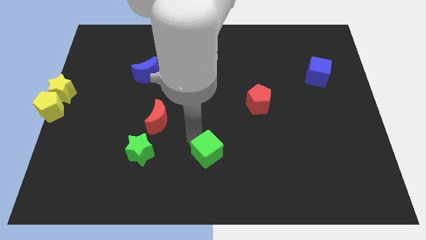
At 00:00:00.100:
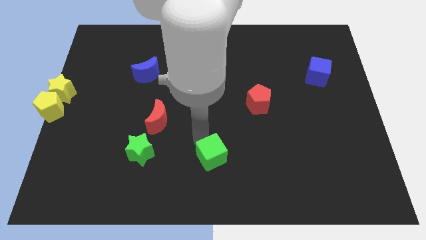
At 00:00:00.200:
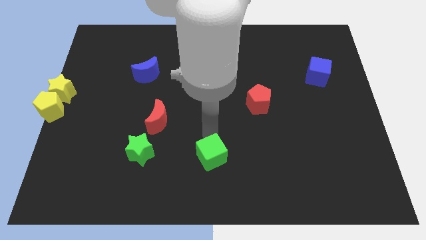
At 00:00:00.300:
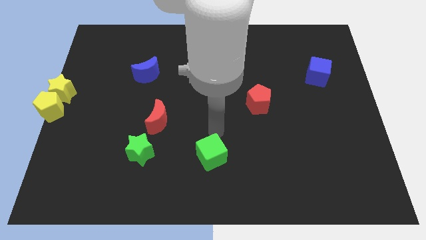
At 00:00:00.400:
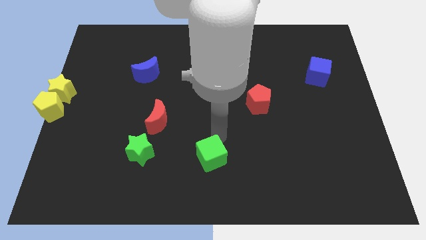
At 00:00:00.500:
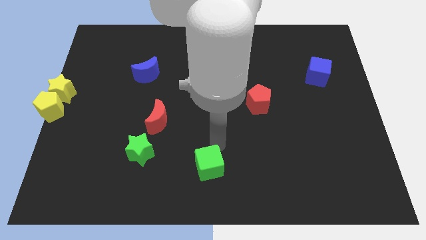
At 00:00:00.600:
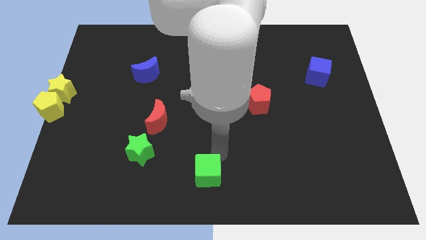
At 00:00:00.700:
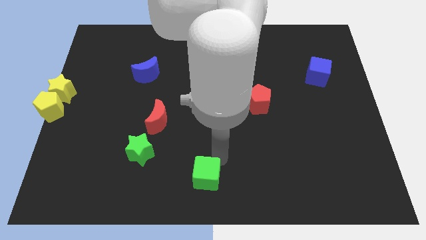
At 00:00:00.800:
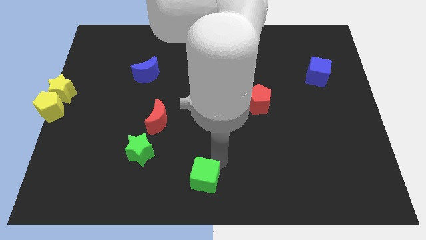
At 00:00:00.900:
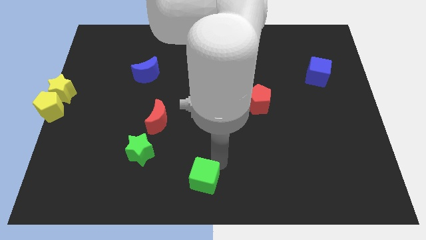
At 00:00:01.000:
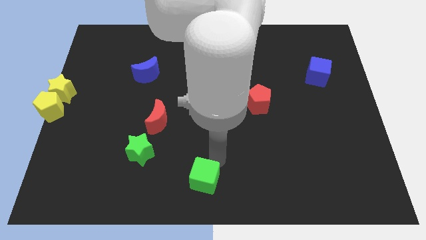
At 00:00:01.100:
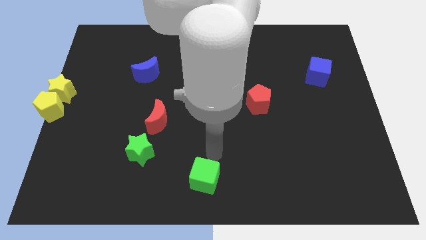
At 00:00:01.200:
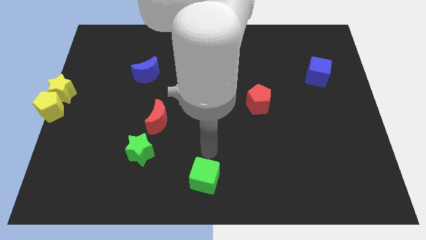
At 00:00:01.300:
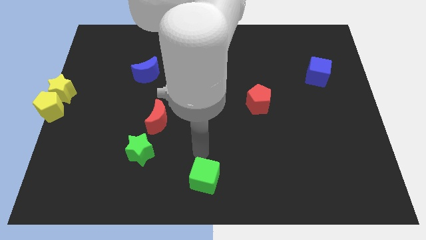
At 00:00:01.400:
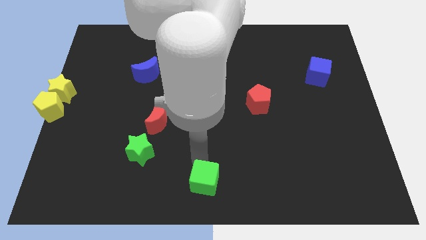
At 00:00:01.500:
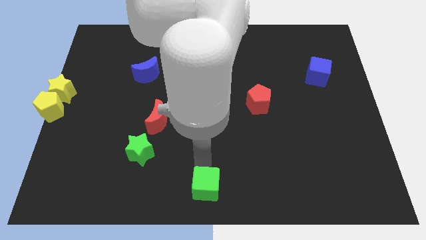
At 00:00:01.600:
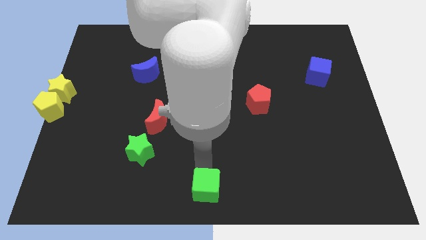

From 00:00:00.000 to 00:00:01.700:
put the green cube at the bottom center

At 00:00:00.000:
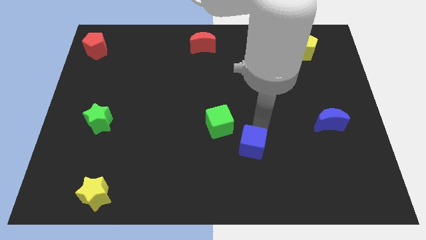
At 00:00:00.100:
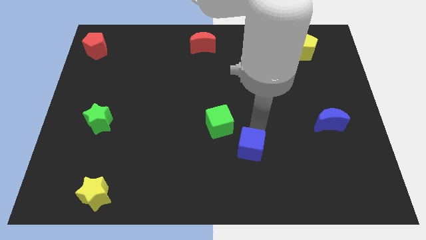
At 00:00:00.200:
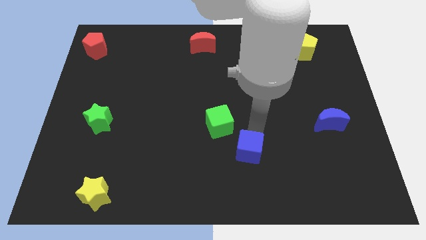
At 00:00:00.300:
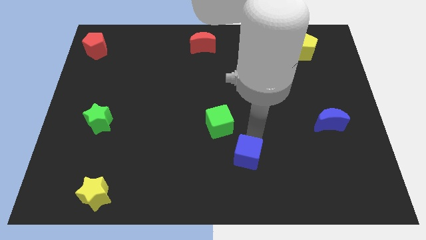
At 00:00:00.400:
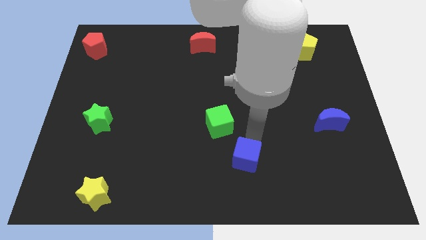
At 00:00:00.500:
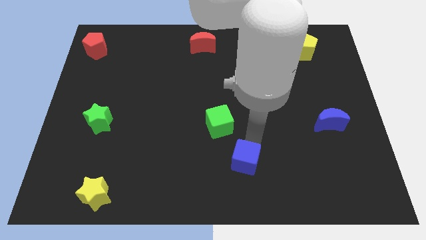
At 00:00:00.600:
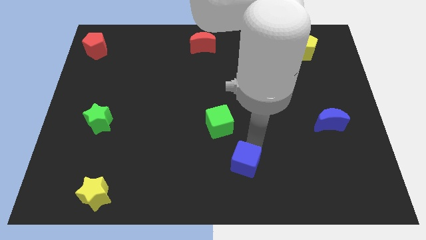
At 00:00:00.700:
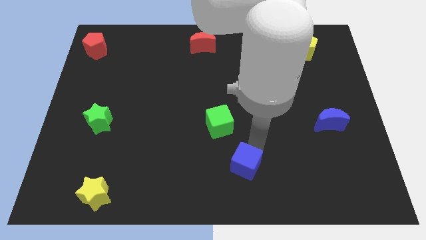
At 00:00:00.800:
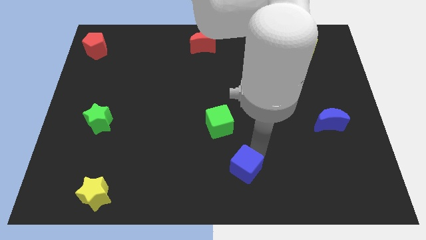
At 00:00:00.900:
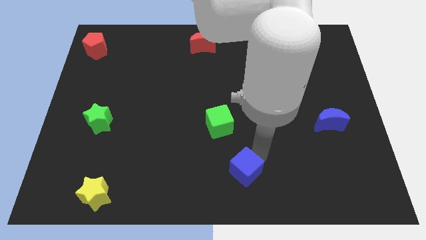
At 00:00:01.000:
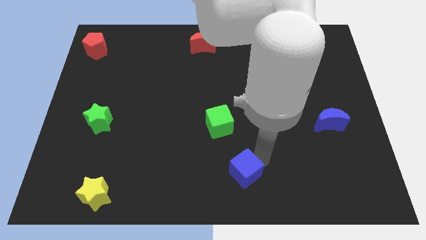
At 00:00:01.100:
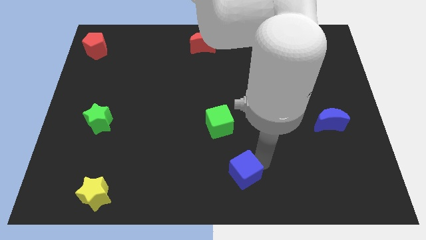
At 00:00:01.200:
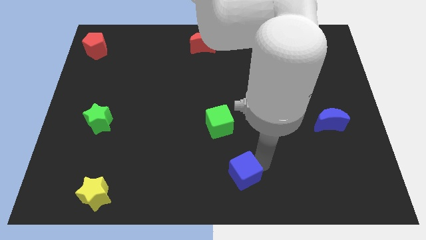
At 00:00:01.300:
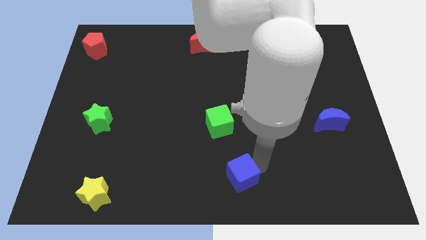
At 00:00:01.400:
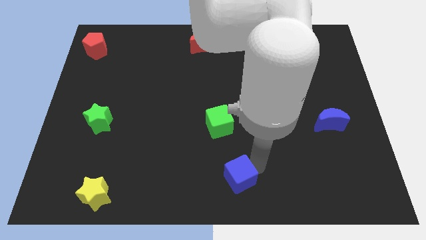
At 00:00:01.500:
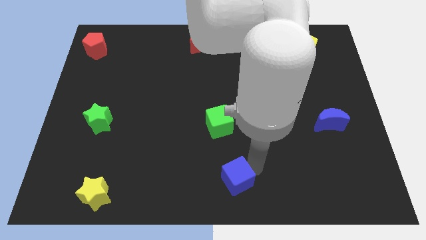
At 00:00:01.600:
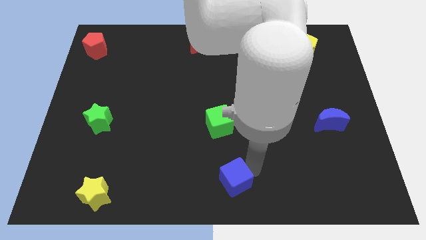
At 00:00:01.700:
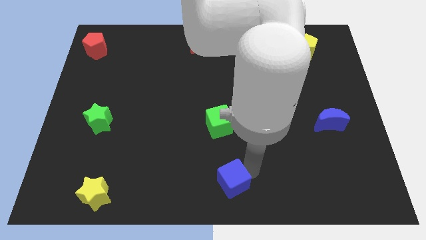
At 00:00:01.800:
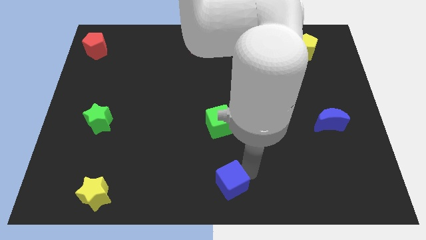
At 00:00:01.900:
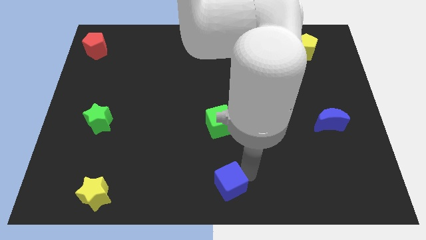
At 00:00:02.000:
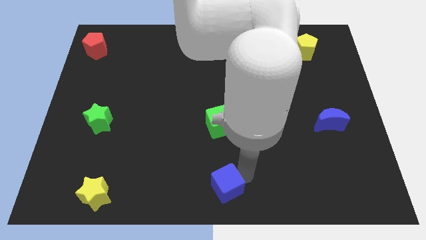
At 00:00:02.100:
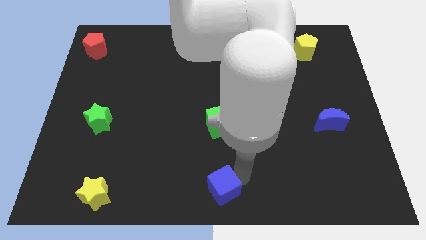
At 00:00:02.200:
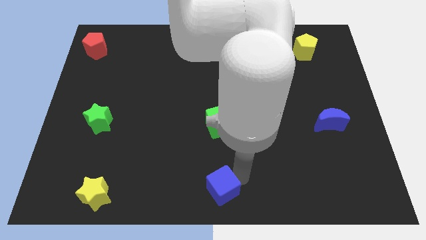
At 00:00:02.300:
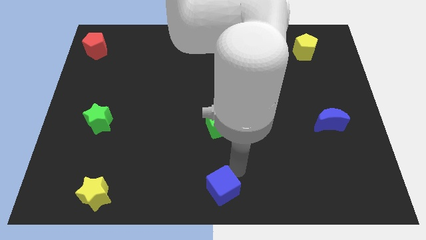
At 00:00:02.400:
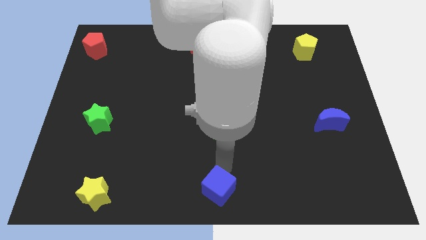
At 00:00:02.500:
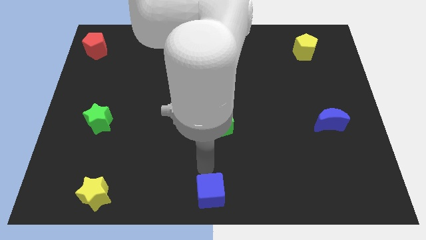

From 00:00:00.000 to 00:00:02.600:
move the blue cube to the bottom of the green cube

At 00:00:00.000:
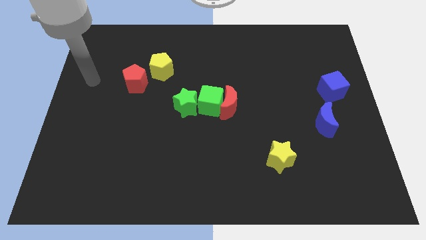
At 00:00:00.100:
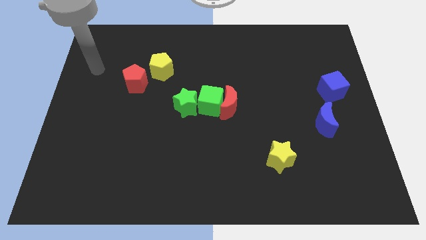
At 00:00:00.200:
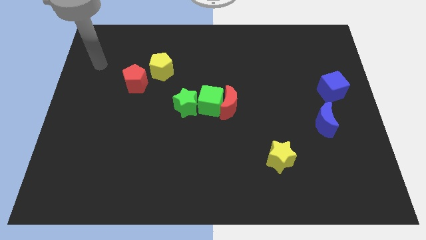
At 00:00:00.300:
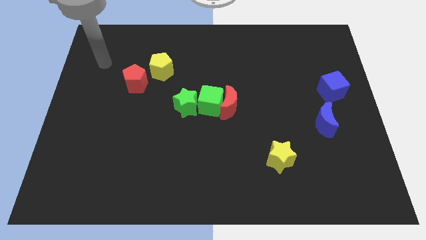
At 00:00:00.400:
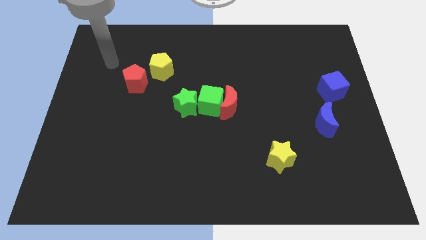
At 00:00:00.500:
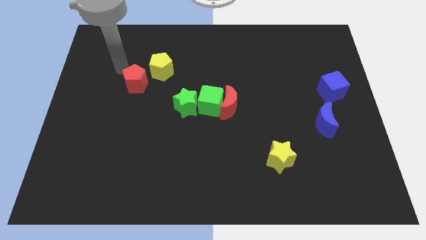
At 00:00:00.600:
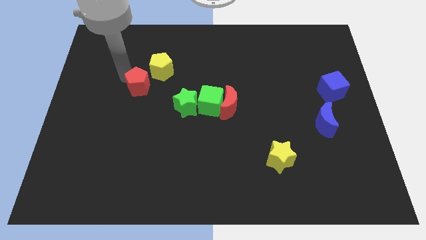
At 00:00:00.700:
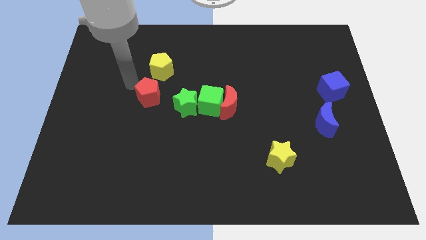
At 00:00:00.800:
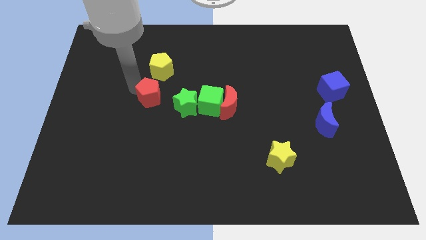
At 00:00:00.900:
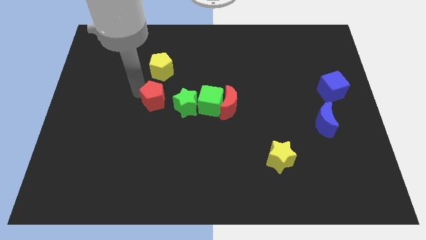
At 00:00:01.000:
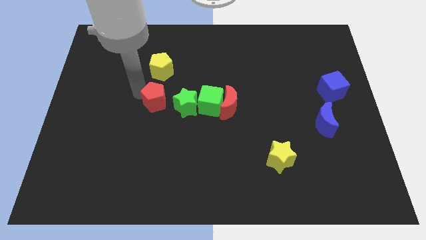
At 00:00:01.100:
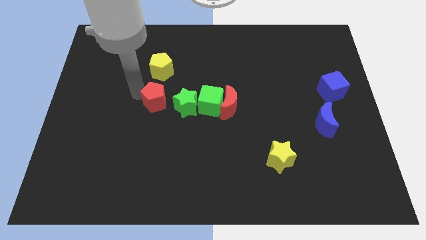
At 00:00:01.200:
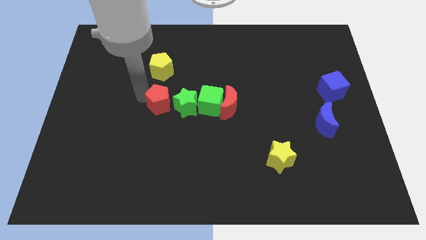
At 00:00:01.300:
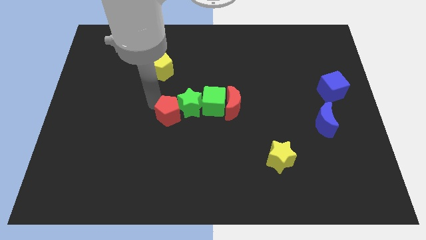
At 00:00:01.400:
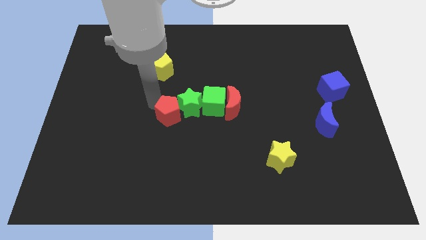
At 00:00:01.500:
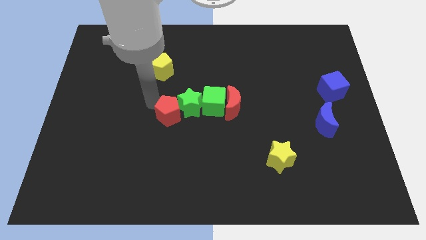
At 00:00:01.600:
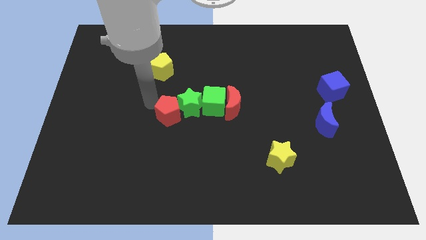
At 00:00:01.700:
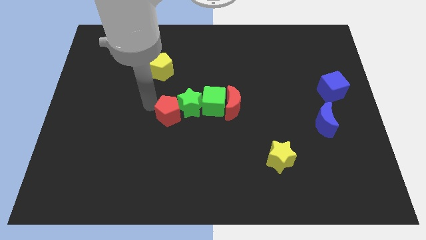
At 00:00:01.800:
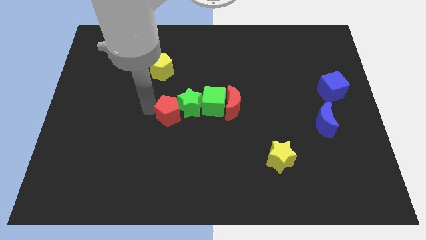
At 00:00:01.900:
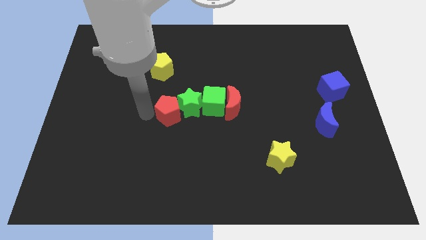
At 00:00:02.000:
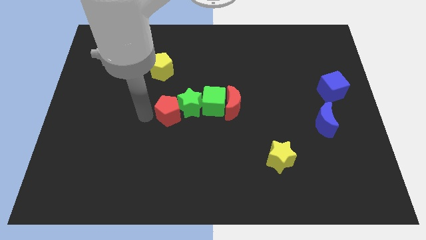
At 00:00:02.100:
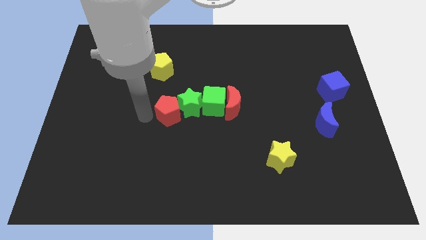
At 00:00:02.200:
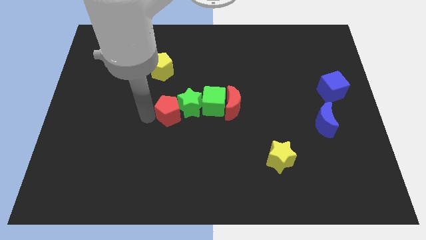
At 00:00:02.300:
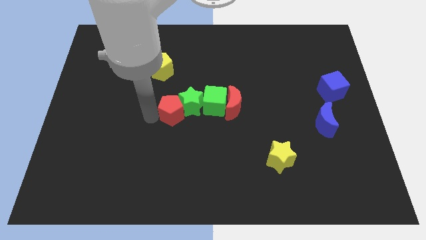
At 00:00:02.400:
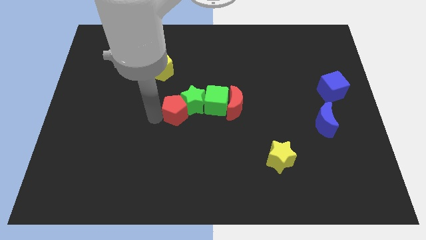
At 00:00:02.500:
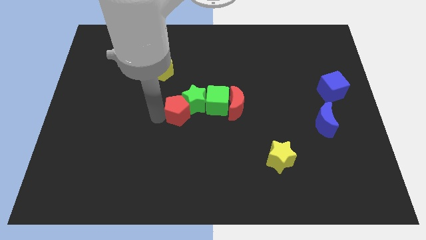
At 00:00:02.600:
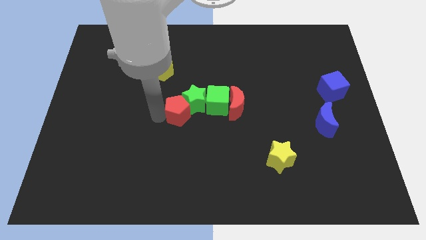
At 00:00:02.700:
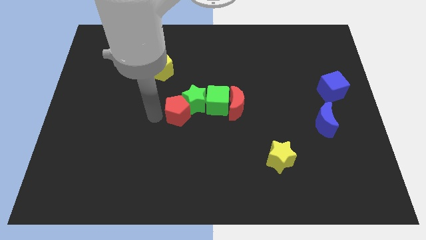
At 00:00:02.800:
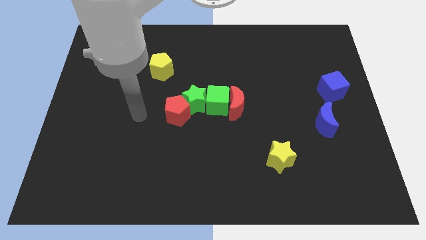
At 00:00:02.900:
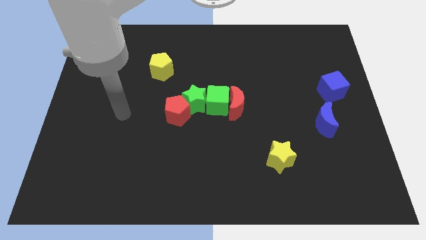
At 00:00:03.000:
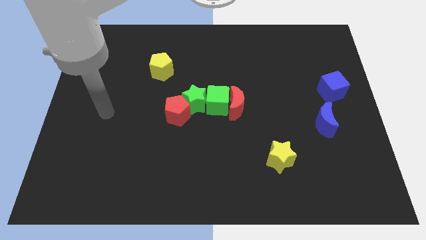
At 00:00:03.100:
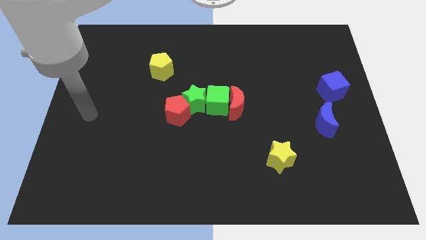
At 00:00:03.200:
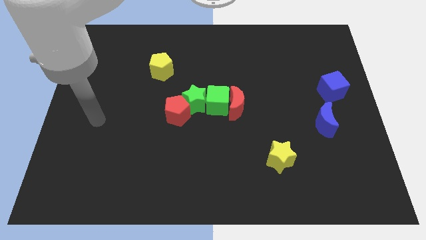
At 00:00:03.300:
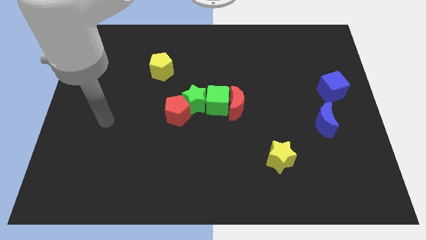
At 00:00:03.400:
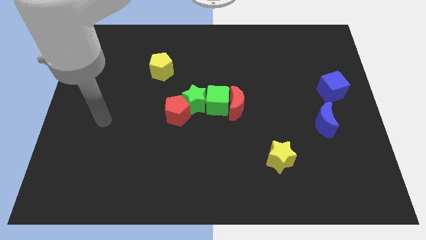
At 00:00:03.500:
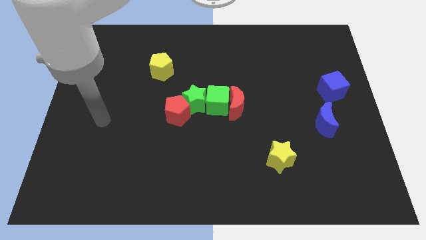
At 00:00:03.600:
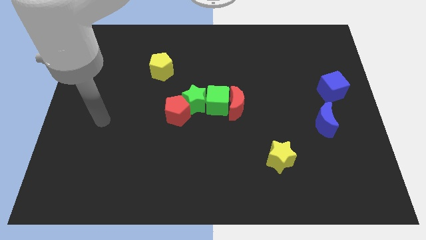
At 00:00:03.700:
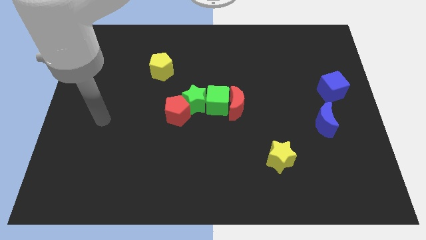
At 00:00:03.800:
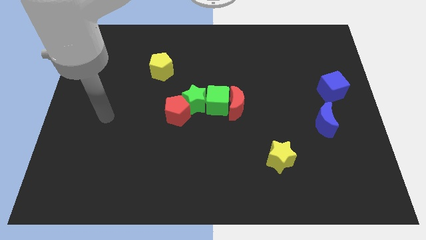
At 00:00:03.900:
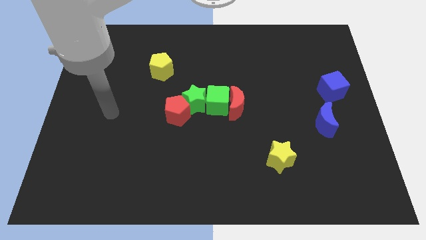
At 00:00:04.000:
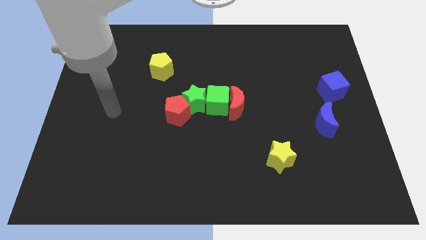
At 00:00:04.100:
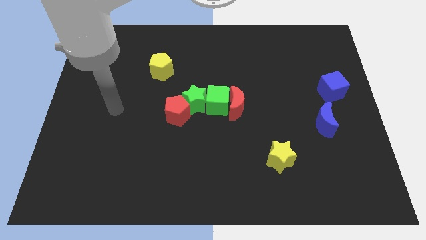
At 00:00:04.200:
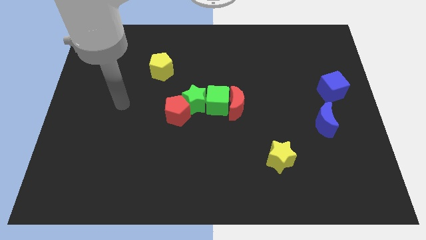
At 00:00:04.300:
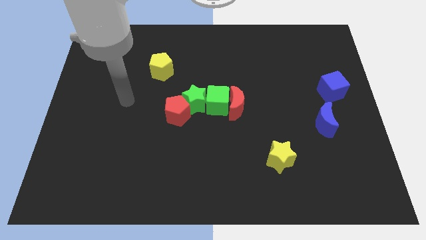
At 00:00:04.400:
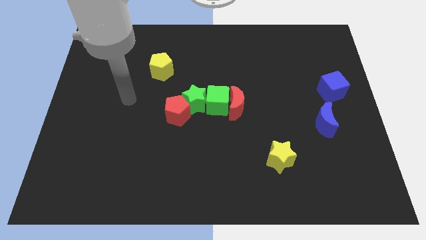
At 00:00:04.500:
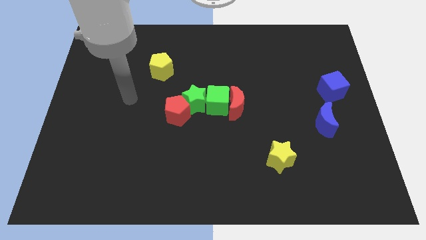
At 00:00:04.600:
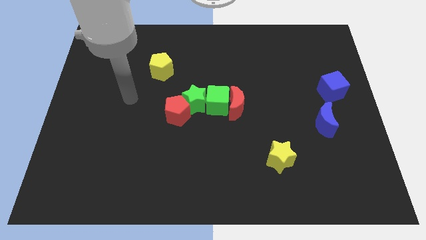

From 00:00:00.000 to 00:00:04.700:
place the red penatgon to left side of the green star
